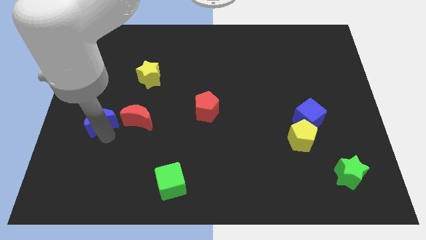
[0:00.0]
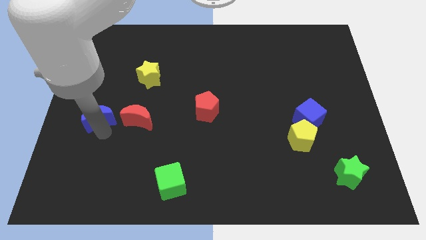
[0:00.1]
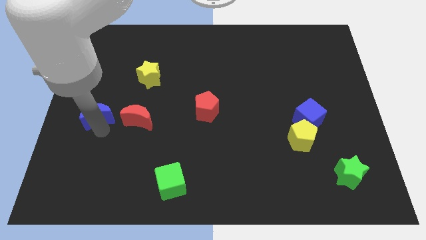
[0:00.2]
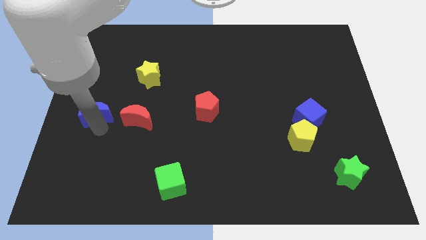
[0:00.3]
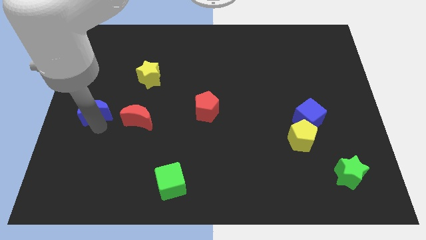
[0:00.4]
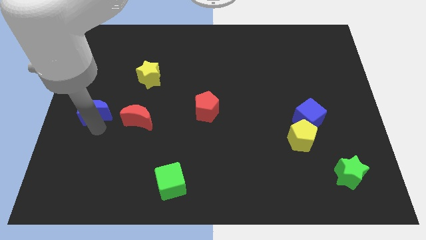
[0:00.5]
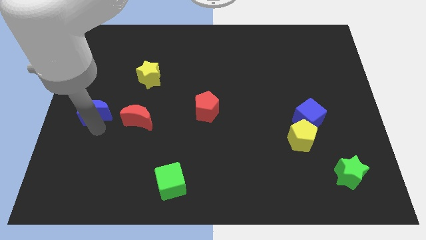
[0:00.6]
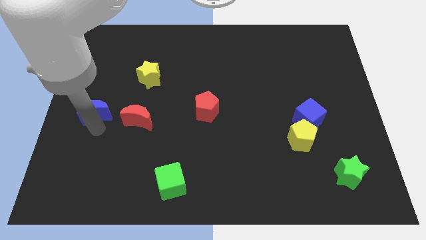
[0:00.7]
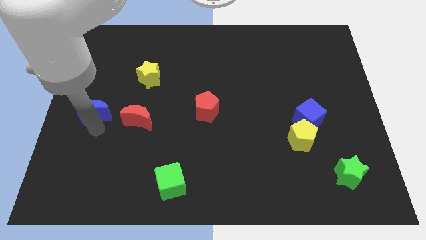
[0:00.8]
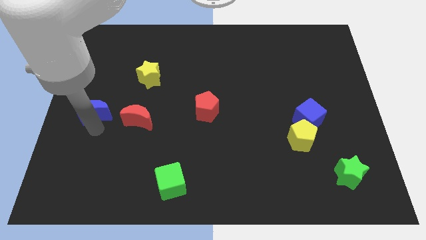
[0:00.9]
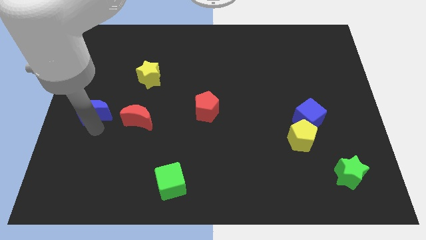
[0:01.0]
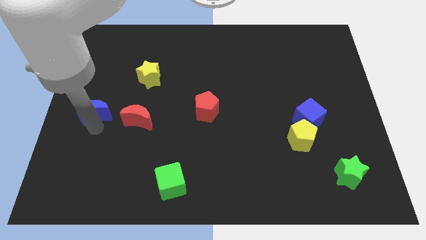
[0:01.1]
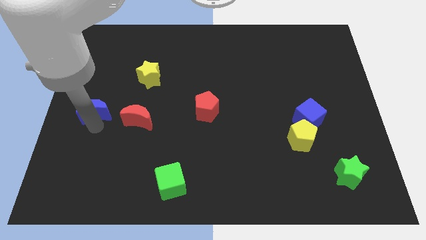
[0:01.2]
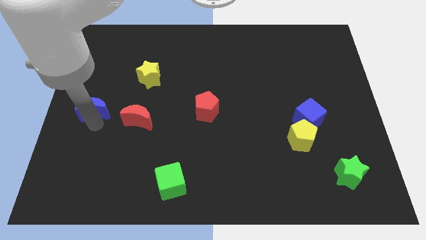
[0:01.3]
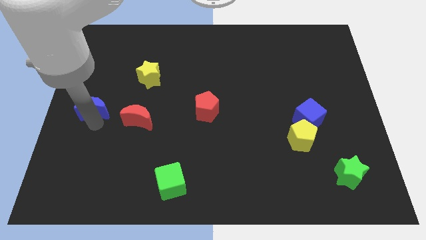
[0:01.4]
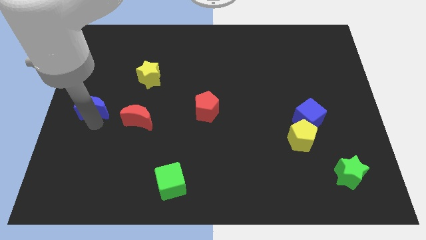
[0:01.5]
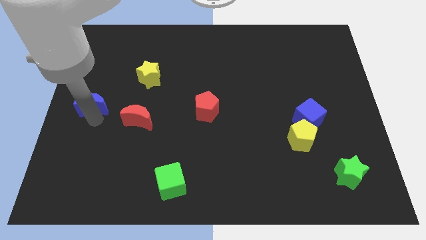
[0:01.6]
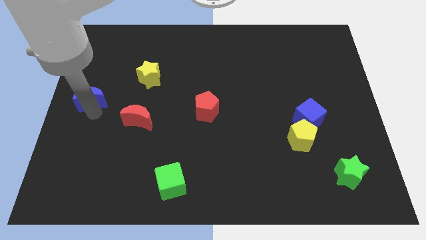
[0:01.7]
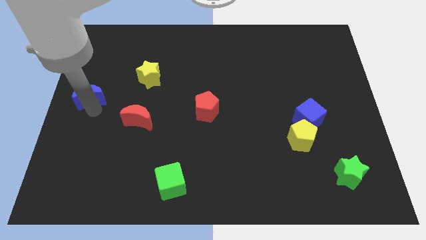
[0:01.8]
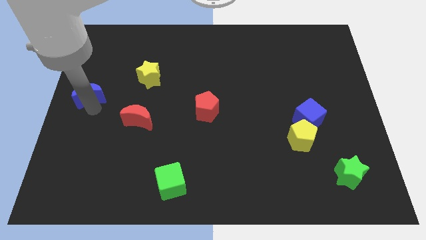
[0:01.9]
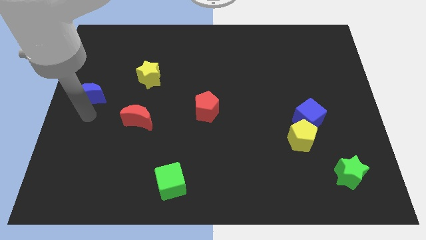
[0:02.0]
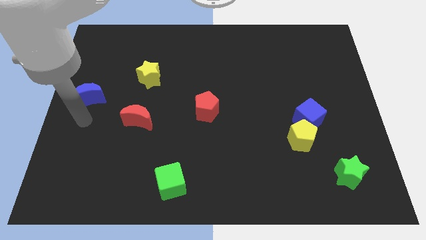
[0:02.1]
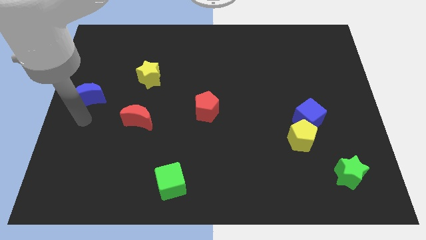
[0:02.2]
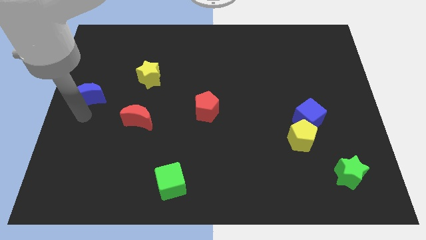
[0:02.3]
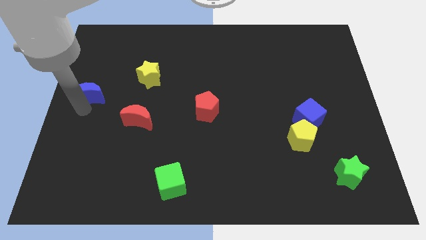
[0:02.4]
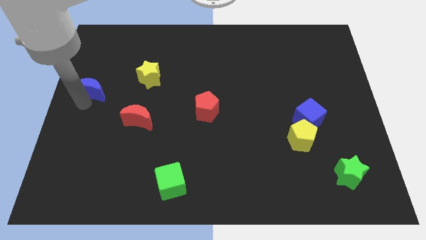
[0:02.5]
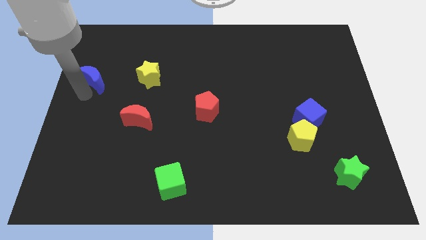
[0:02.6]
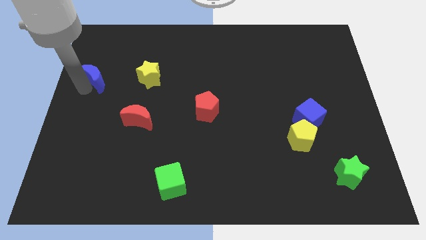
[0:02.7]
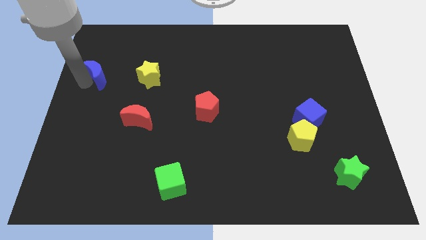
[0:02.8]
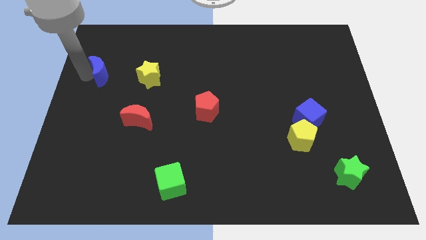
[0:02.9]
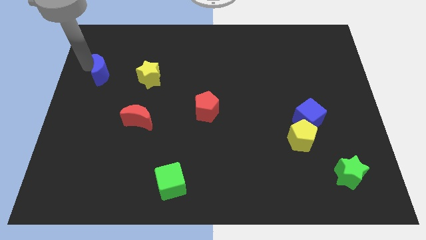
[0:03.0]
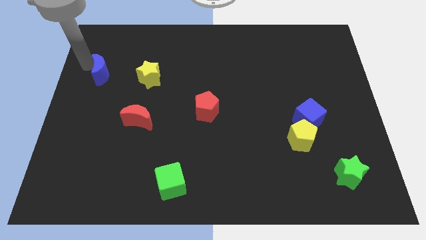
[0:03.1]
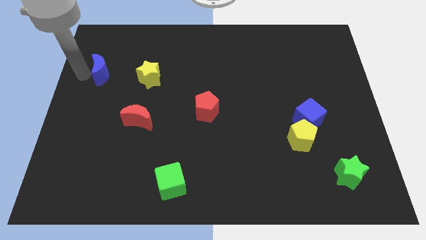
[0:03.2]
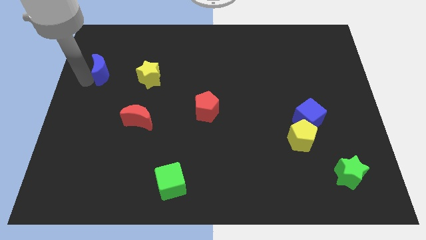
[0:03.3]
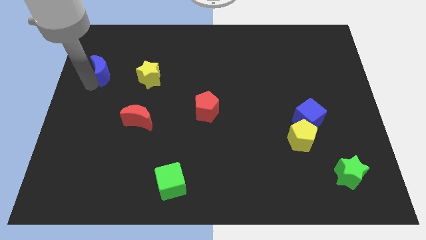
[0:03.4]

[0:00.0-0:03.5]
move red moon left beside the yellow star

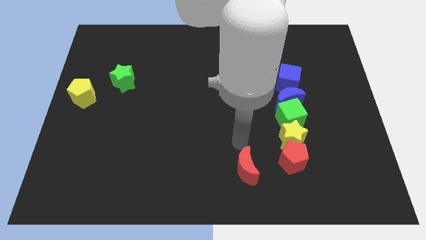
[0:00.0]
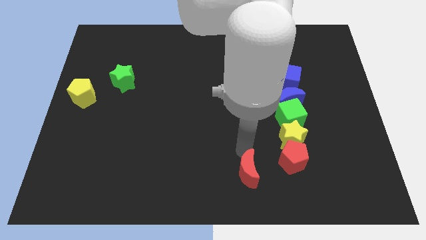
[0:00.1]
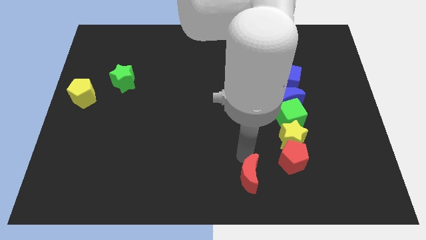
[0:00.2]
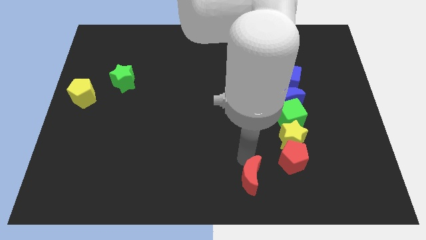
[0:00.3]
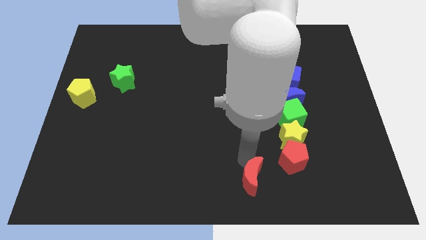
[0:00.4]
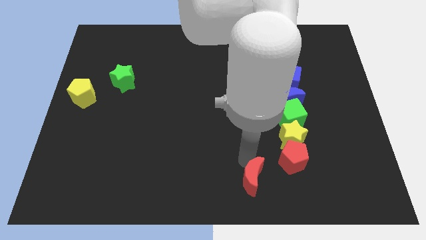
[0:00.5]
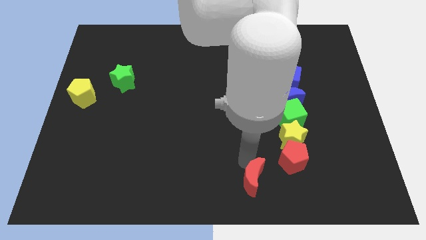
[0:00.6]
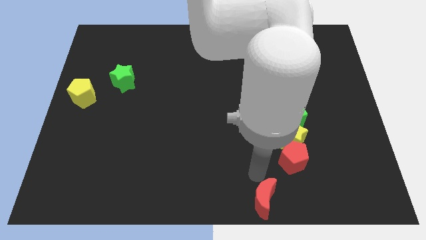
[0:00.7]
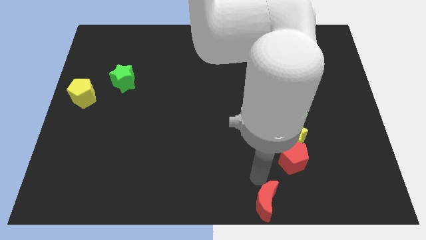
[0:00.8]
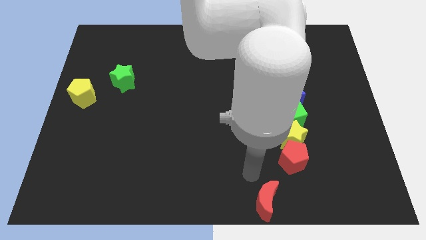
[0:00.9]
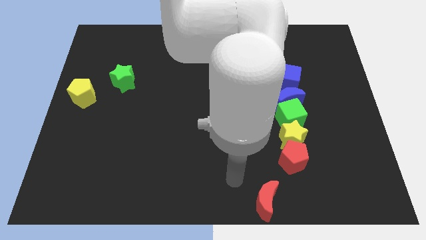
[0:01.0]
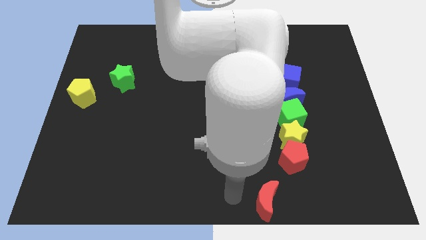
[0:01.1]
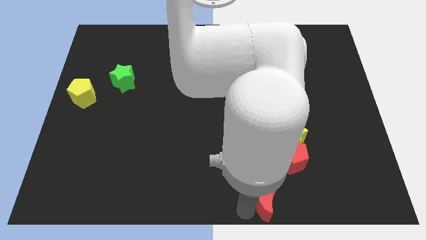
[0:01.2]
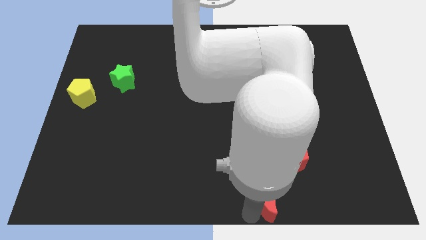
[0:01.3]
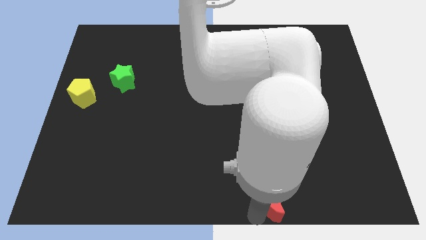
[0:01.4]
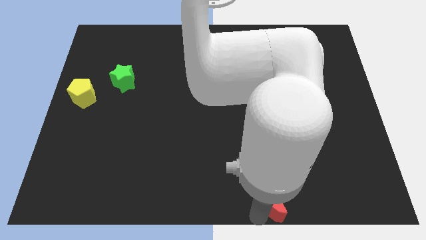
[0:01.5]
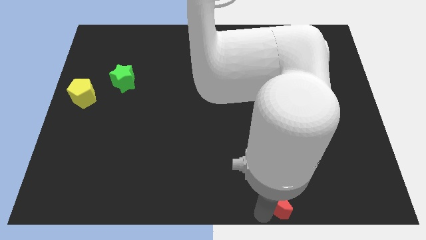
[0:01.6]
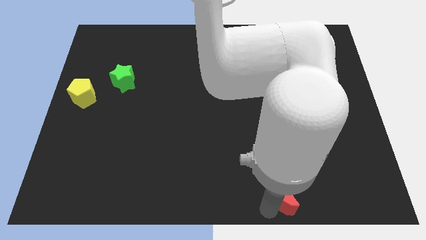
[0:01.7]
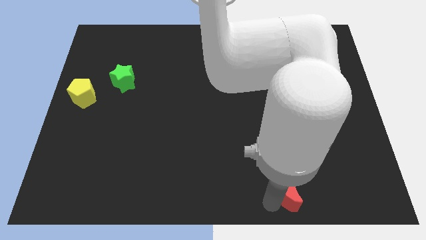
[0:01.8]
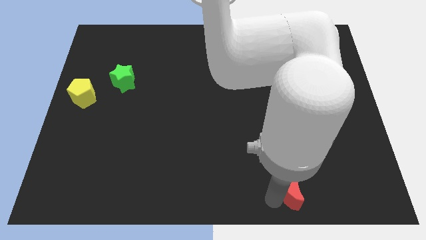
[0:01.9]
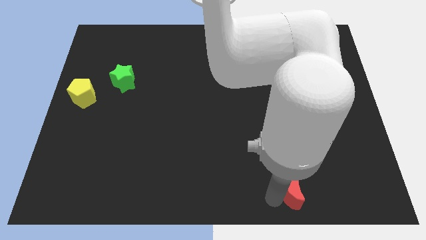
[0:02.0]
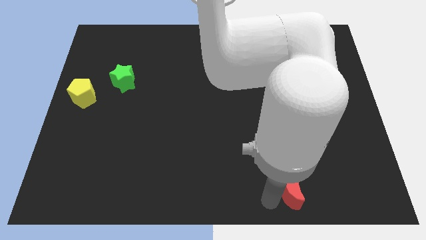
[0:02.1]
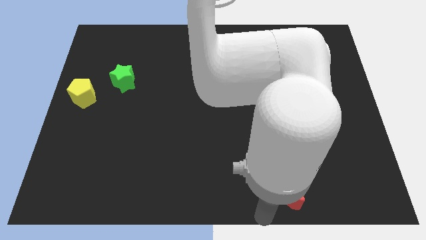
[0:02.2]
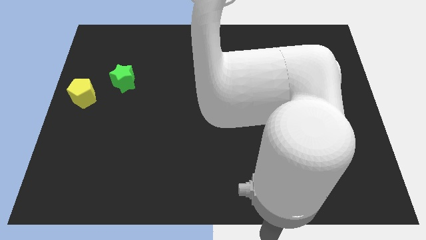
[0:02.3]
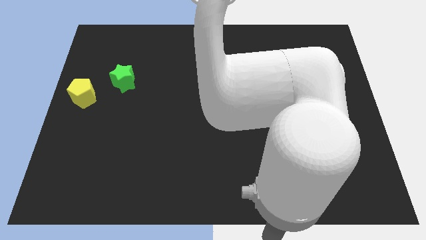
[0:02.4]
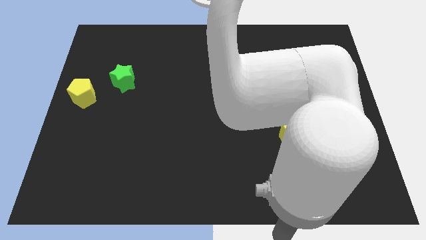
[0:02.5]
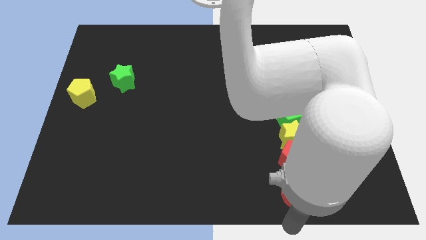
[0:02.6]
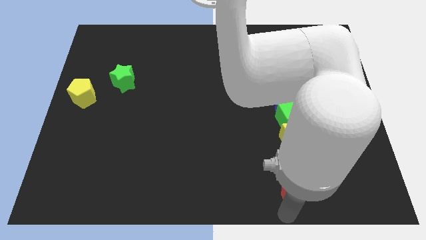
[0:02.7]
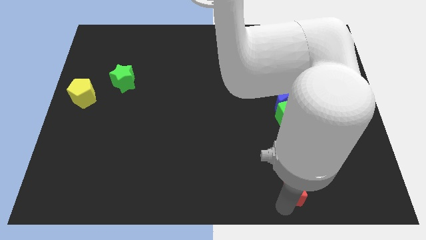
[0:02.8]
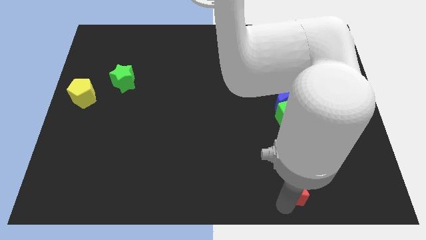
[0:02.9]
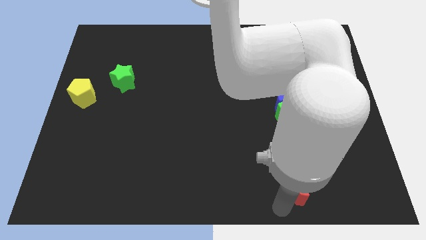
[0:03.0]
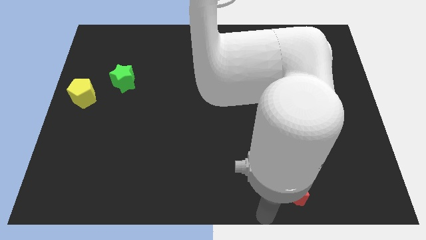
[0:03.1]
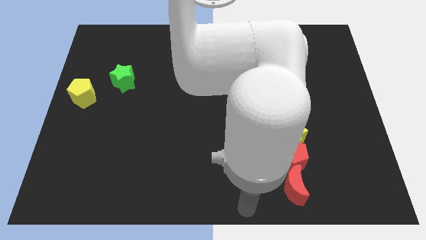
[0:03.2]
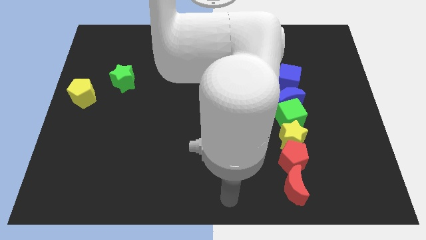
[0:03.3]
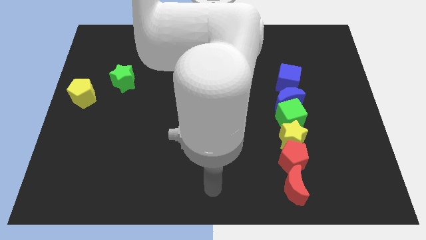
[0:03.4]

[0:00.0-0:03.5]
push the red crescent below the red pentagon
